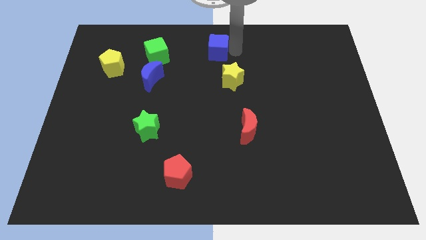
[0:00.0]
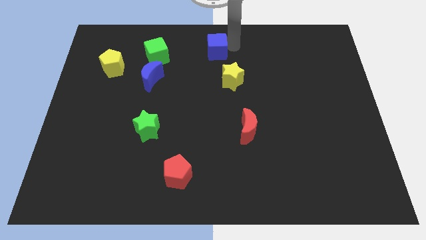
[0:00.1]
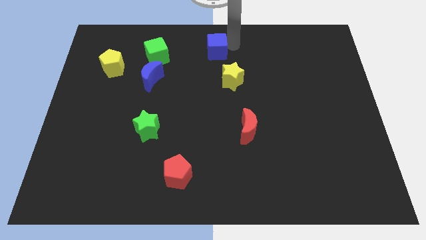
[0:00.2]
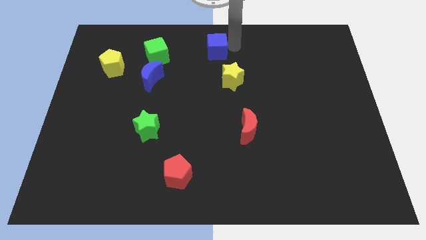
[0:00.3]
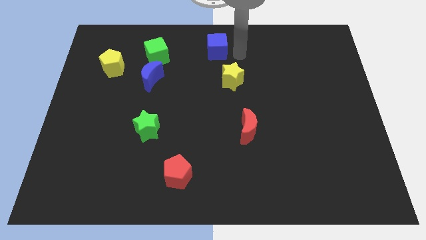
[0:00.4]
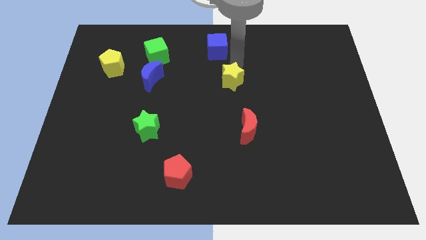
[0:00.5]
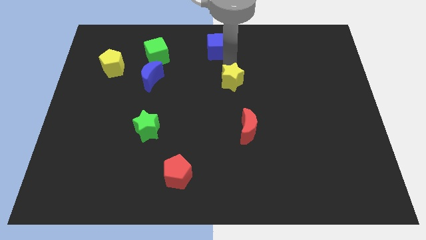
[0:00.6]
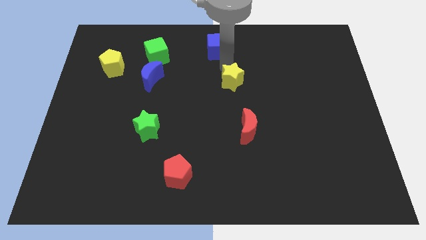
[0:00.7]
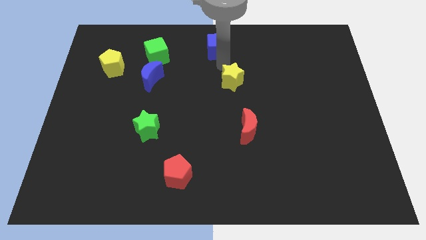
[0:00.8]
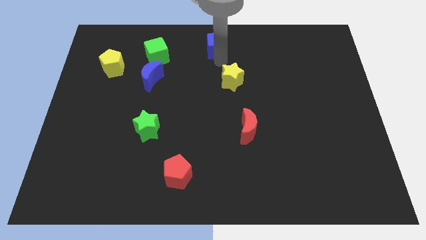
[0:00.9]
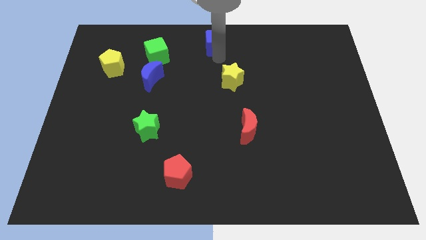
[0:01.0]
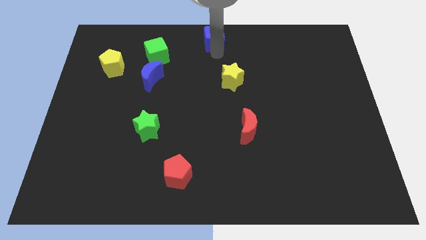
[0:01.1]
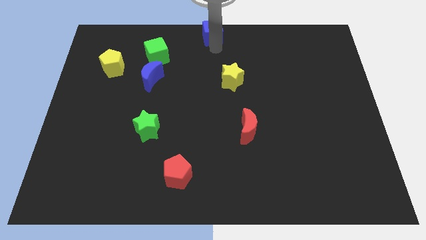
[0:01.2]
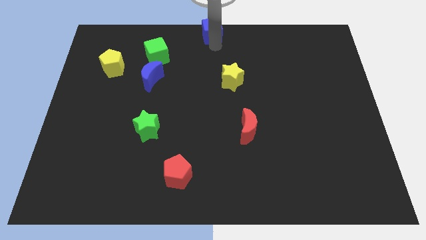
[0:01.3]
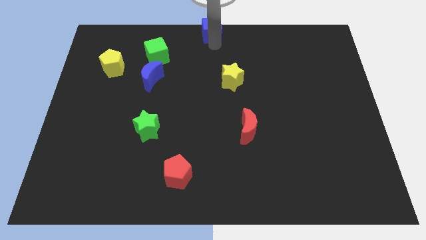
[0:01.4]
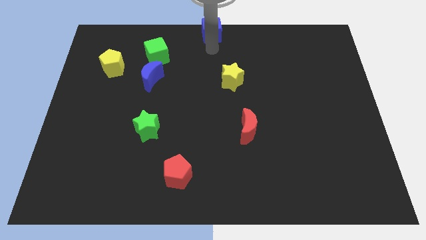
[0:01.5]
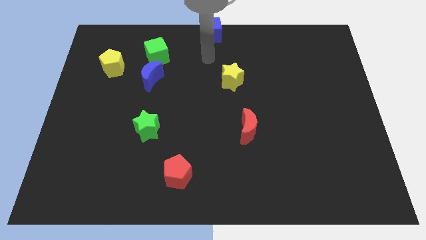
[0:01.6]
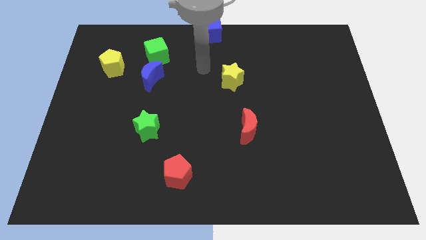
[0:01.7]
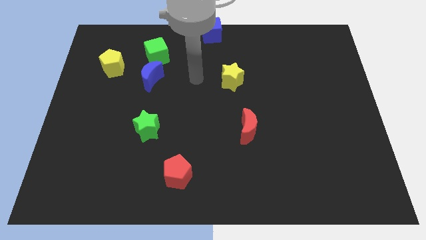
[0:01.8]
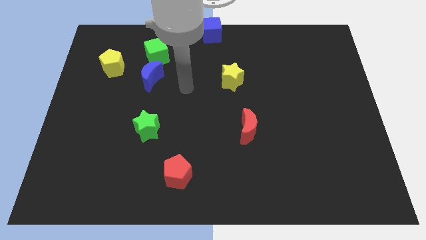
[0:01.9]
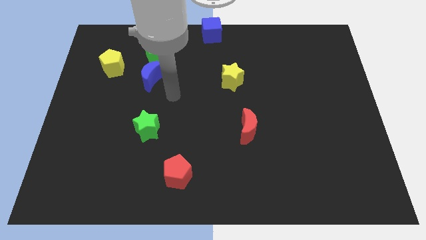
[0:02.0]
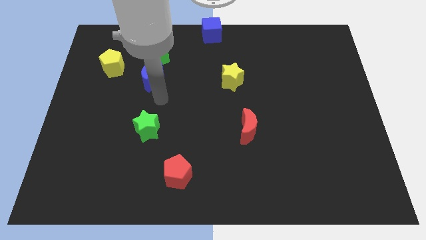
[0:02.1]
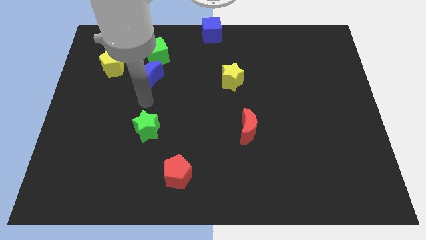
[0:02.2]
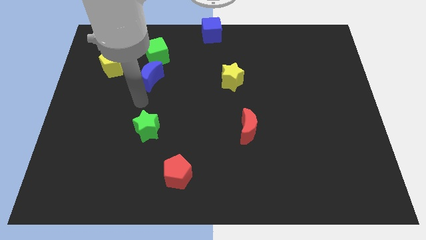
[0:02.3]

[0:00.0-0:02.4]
place the blue cube at the top center of the board

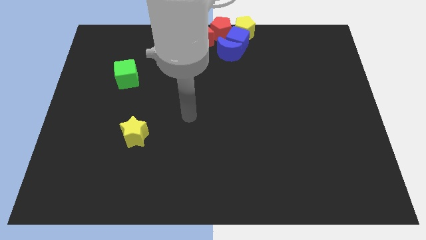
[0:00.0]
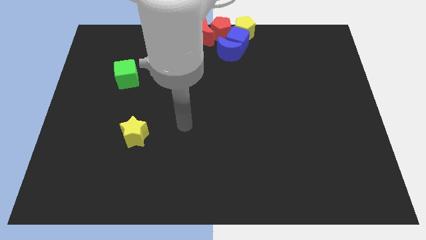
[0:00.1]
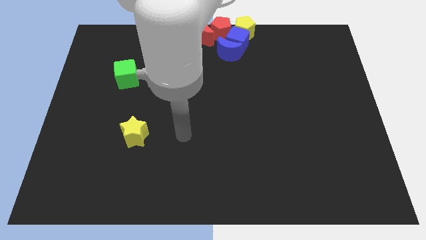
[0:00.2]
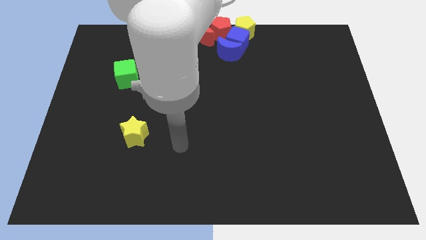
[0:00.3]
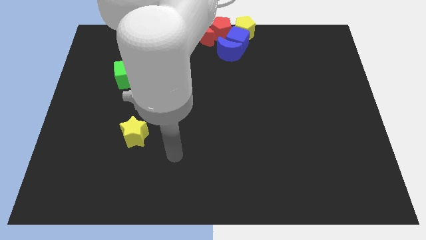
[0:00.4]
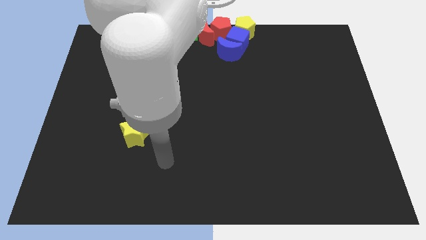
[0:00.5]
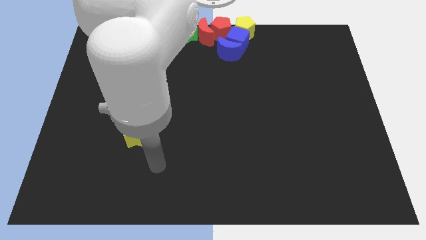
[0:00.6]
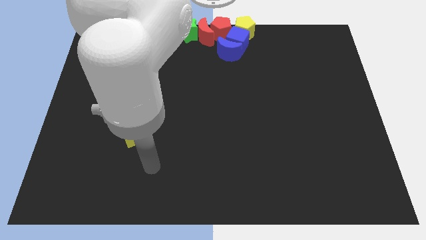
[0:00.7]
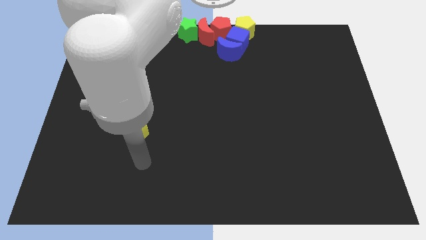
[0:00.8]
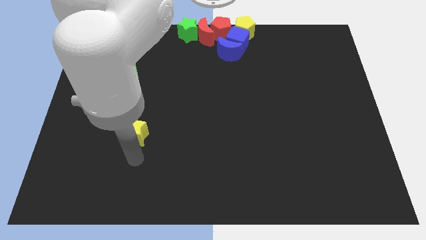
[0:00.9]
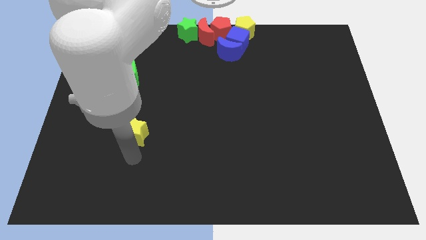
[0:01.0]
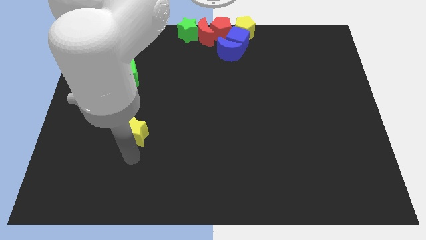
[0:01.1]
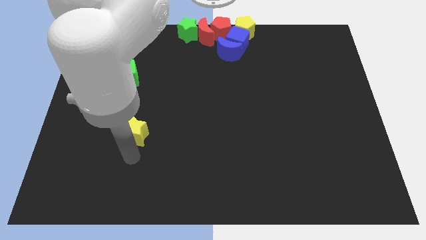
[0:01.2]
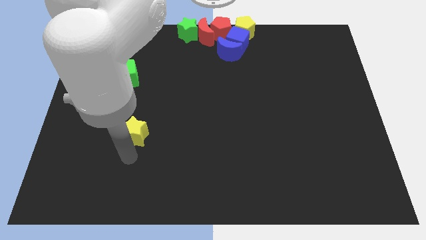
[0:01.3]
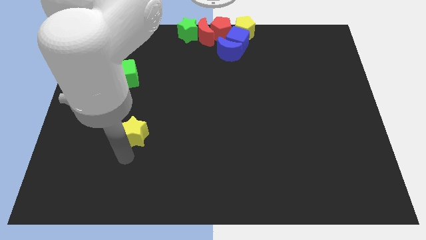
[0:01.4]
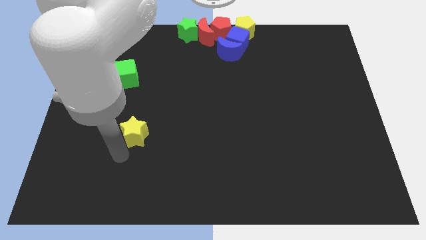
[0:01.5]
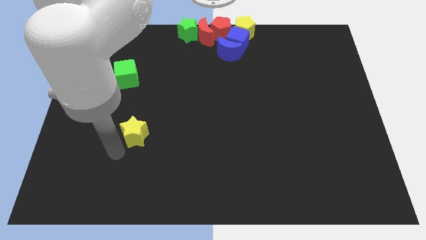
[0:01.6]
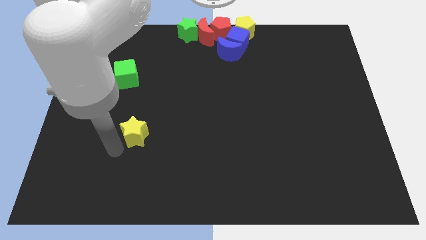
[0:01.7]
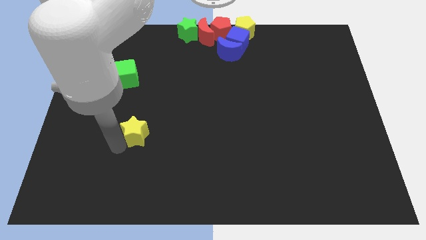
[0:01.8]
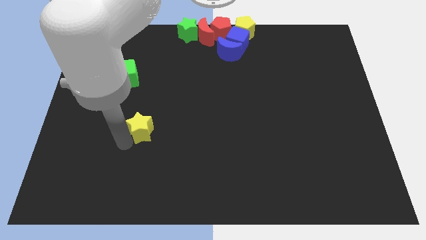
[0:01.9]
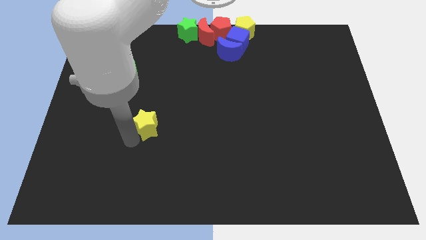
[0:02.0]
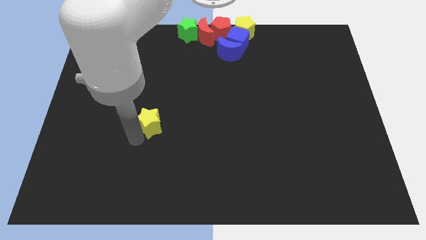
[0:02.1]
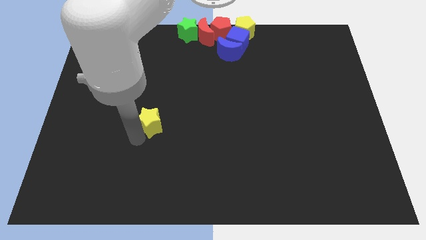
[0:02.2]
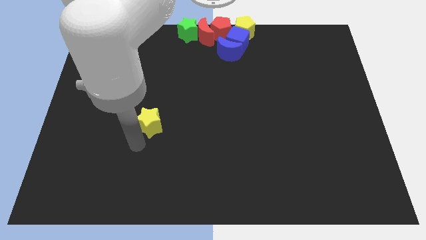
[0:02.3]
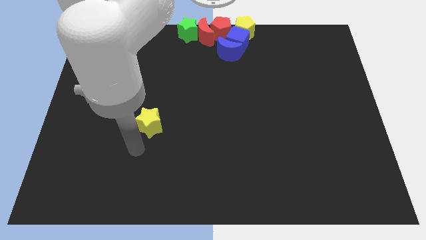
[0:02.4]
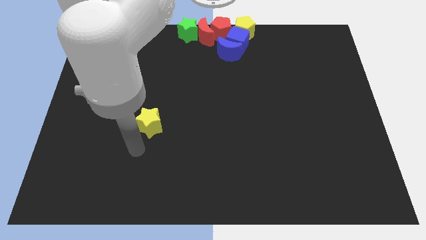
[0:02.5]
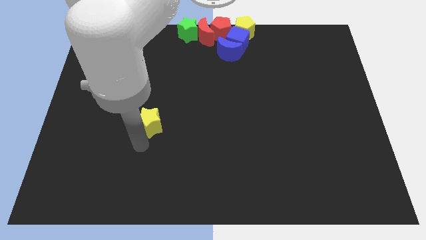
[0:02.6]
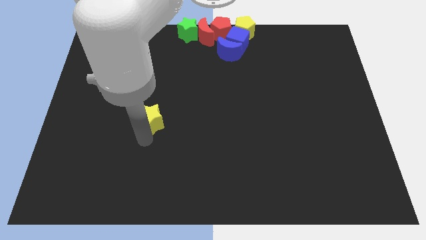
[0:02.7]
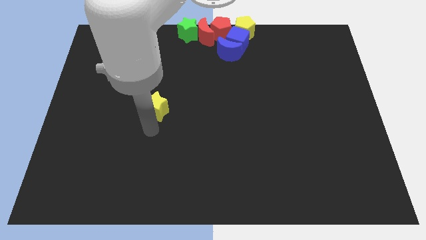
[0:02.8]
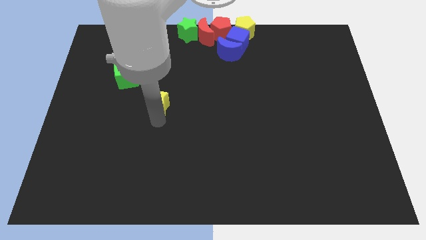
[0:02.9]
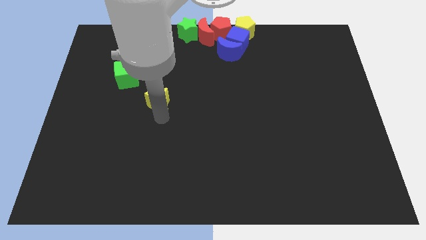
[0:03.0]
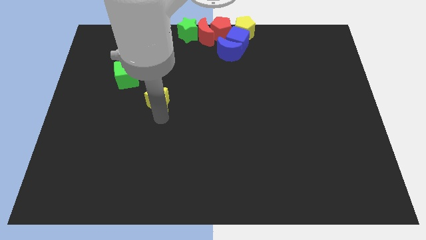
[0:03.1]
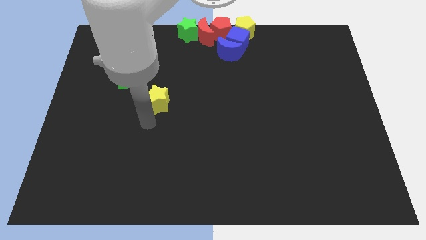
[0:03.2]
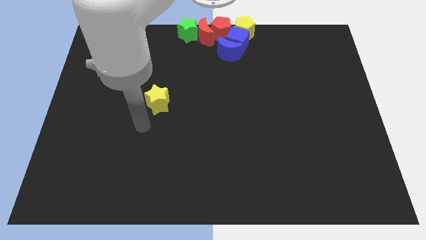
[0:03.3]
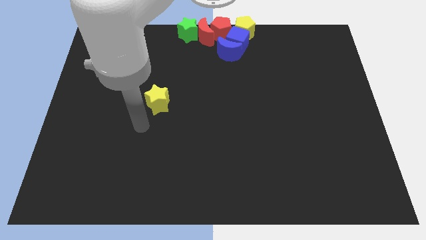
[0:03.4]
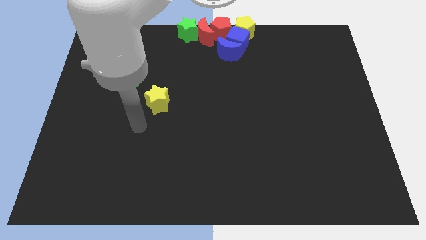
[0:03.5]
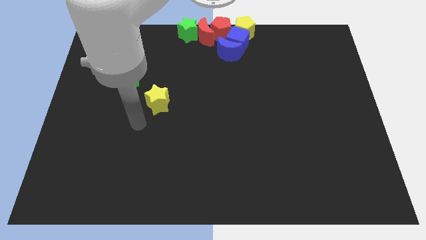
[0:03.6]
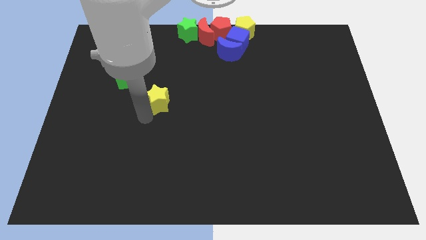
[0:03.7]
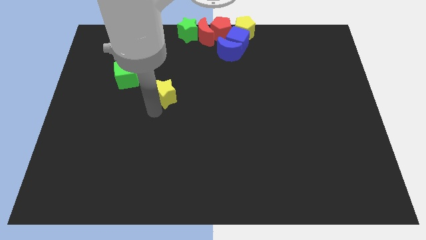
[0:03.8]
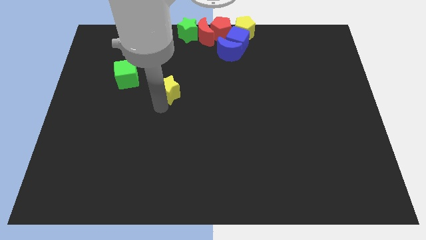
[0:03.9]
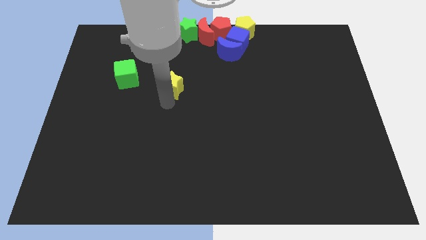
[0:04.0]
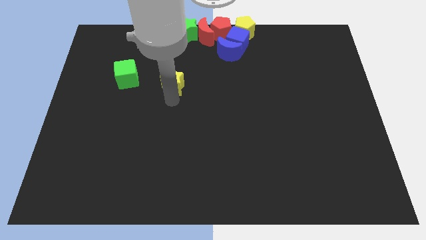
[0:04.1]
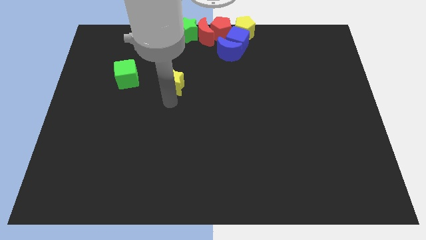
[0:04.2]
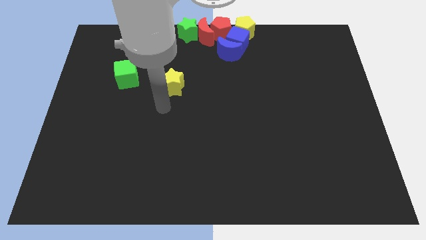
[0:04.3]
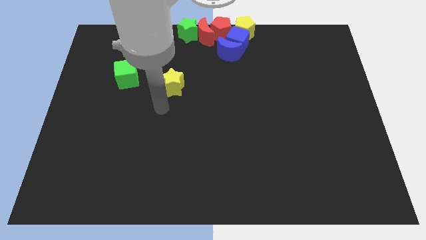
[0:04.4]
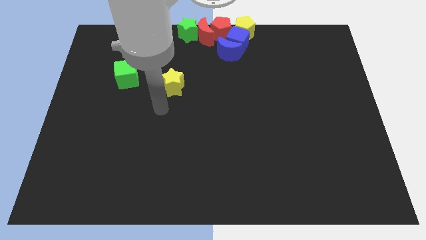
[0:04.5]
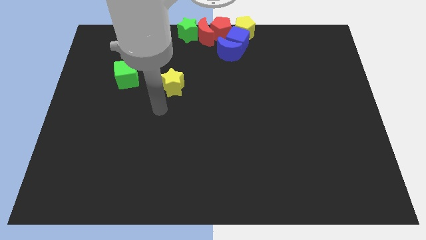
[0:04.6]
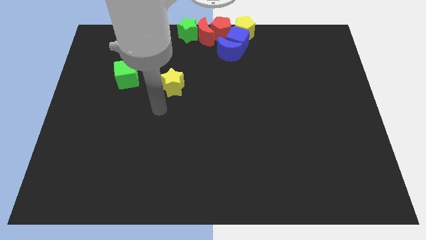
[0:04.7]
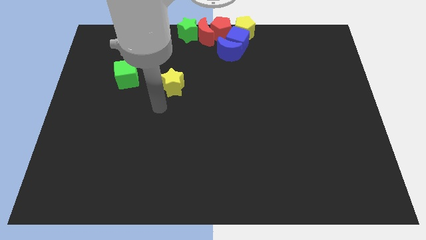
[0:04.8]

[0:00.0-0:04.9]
slide the yellow star near to the green cube

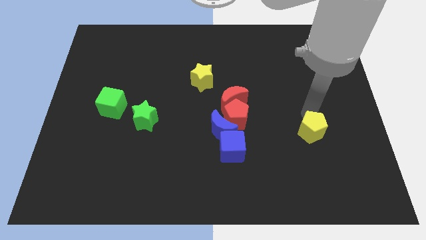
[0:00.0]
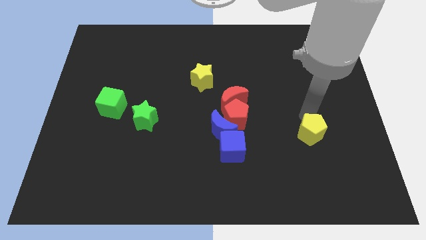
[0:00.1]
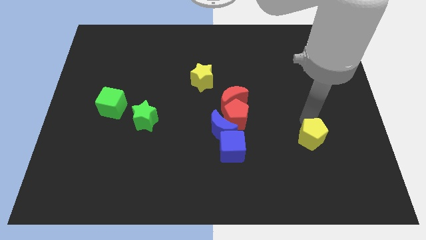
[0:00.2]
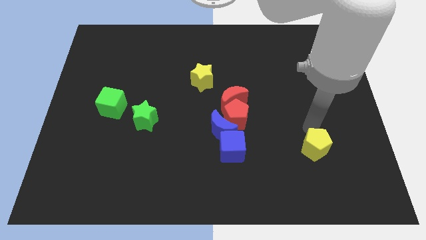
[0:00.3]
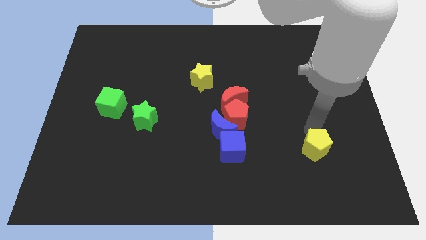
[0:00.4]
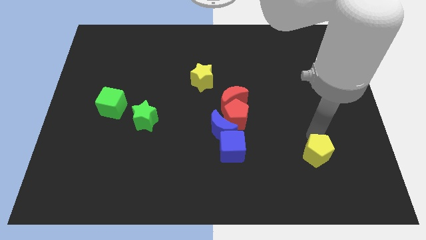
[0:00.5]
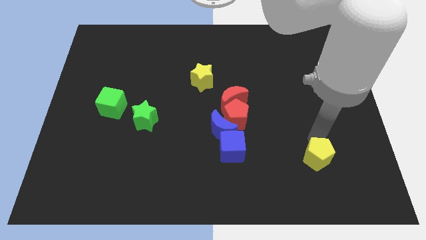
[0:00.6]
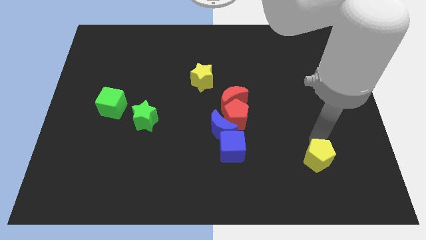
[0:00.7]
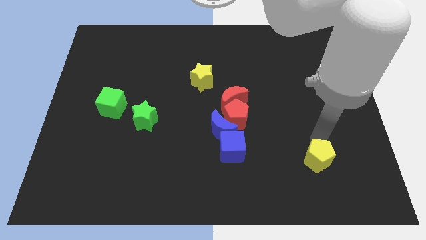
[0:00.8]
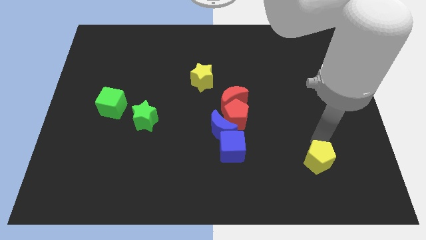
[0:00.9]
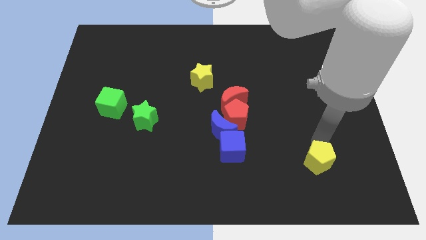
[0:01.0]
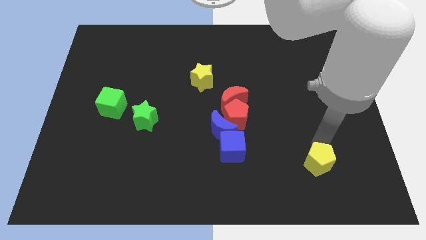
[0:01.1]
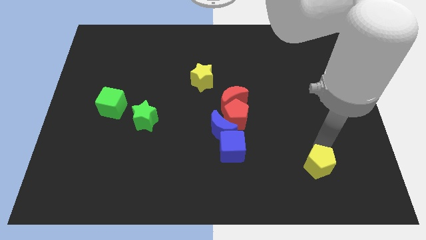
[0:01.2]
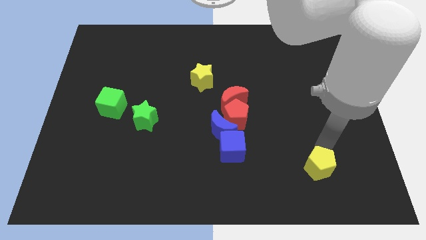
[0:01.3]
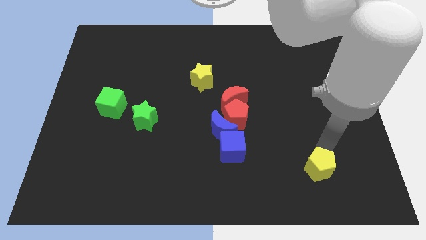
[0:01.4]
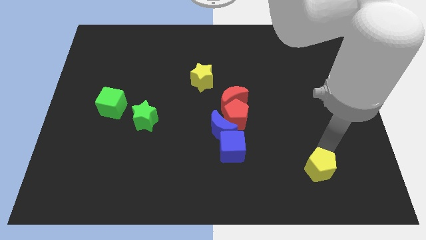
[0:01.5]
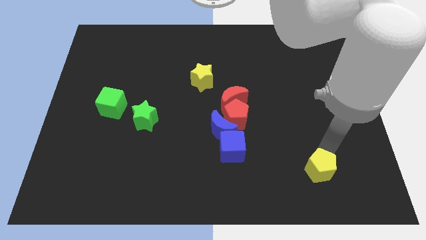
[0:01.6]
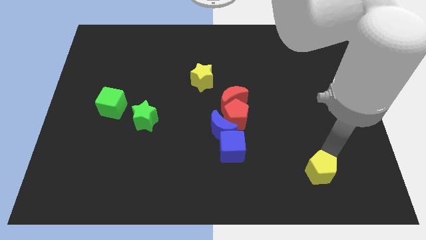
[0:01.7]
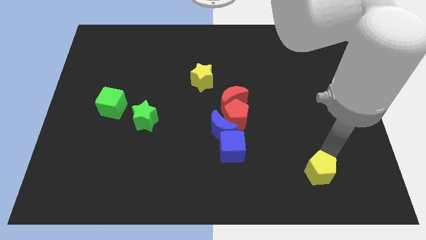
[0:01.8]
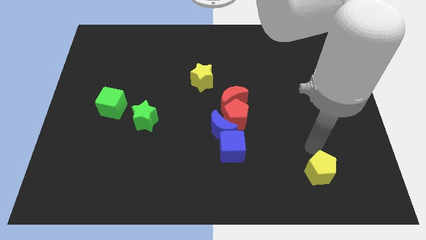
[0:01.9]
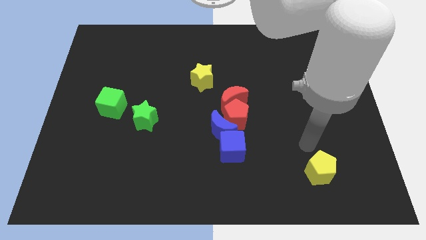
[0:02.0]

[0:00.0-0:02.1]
push yellow pentagon slightly down
